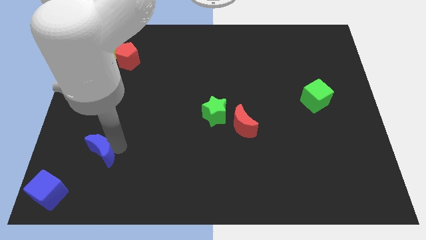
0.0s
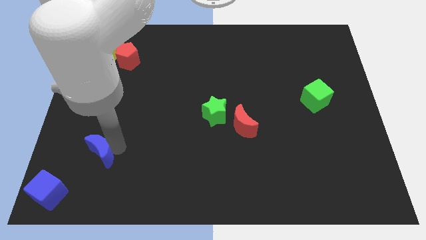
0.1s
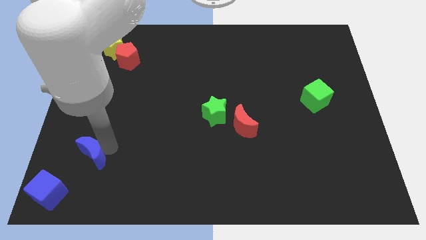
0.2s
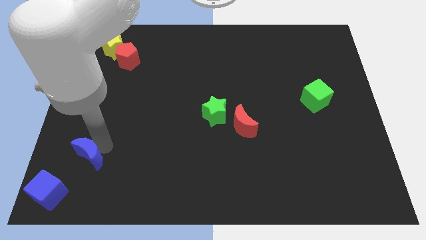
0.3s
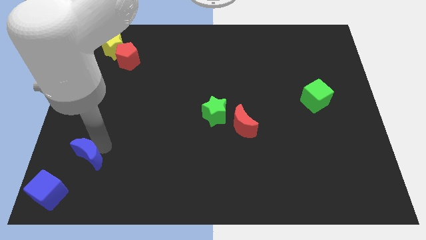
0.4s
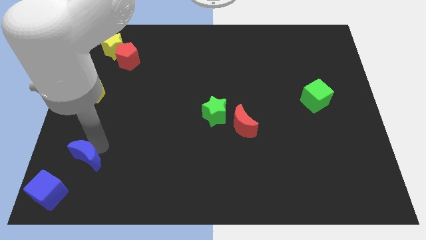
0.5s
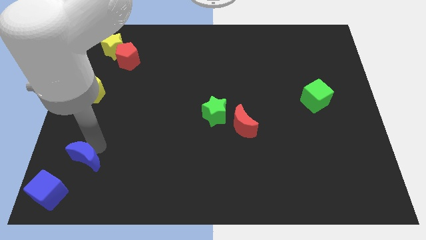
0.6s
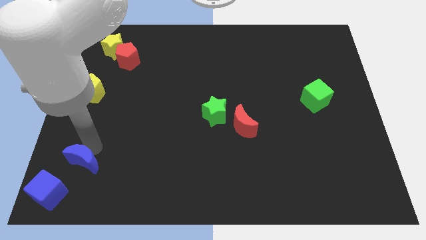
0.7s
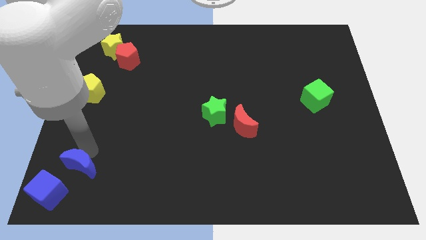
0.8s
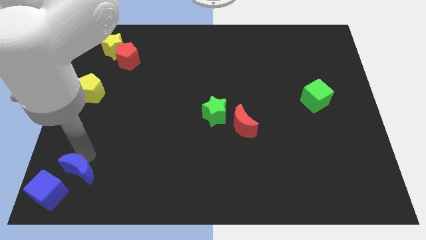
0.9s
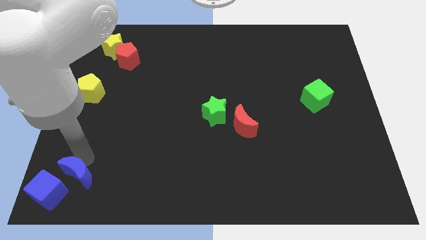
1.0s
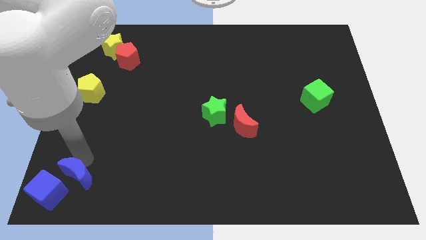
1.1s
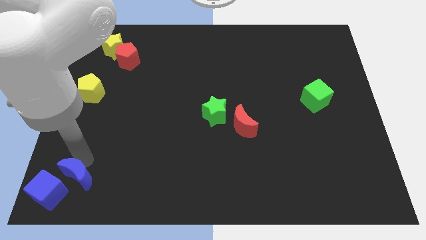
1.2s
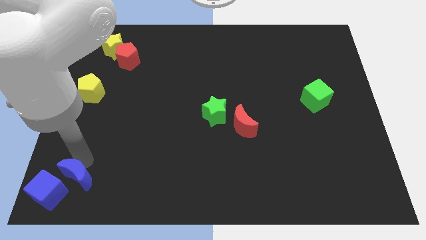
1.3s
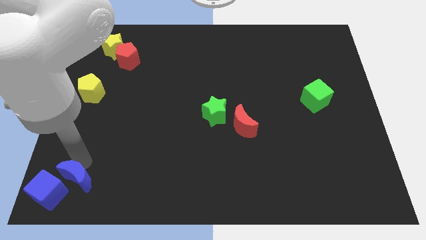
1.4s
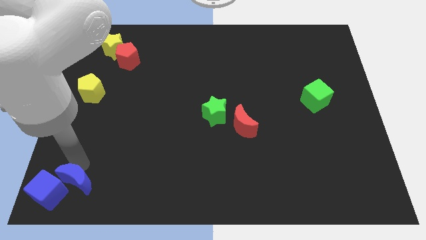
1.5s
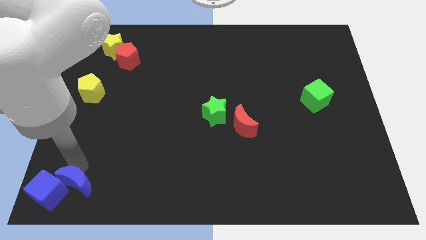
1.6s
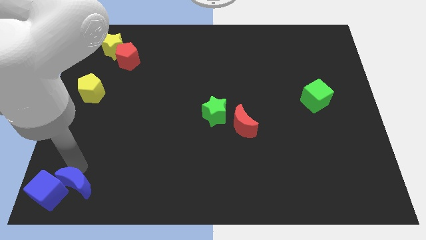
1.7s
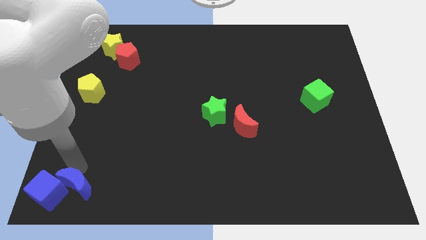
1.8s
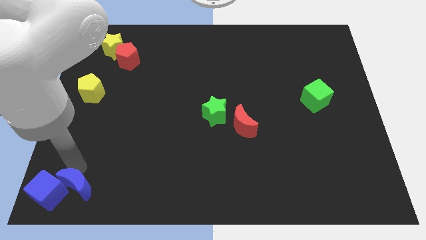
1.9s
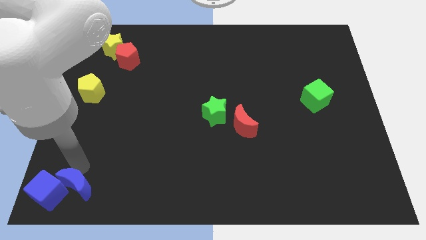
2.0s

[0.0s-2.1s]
move the blue crescent into the blue cube

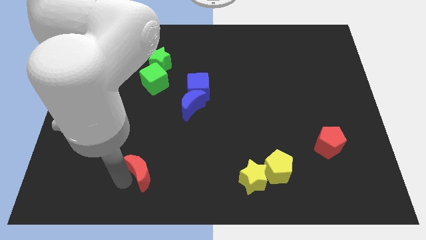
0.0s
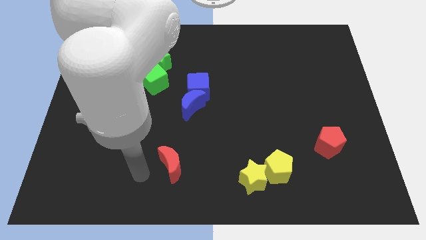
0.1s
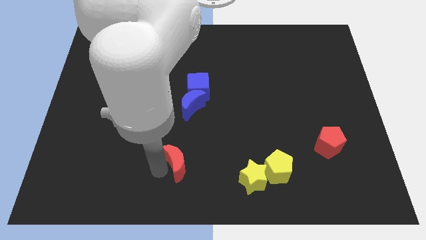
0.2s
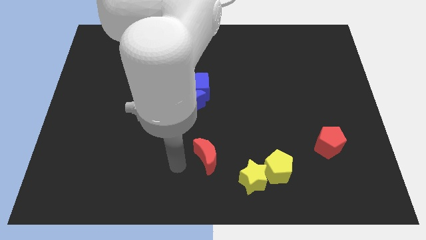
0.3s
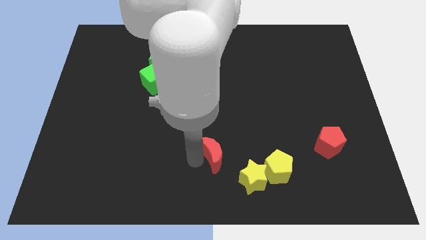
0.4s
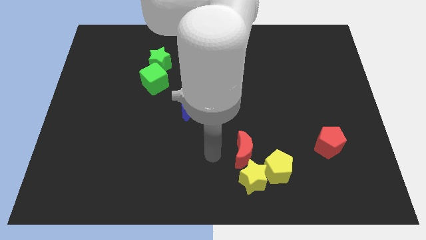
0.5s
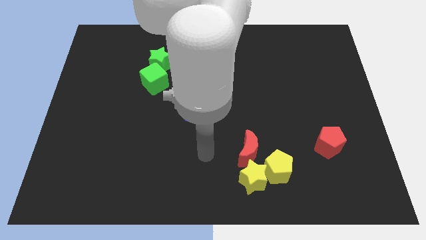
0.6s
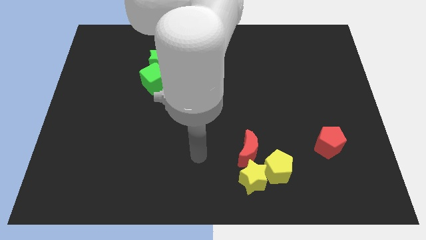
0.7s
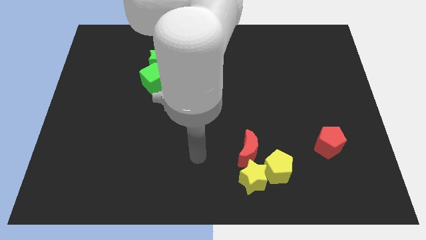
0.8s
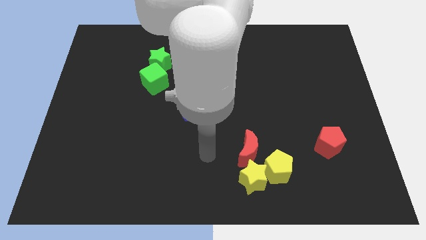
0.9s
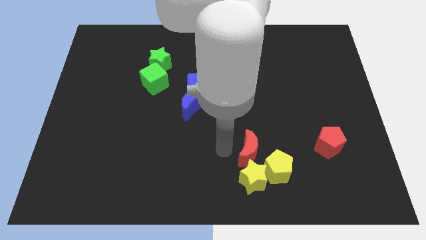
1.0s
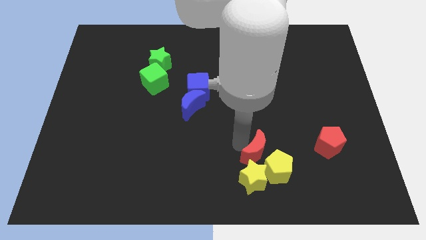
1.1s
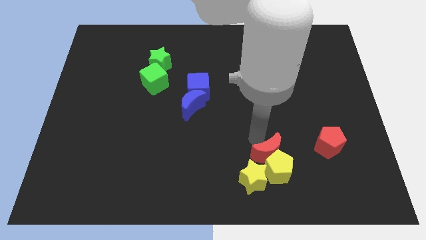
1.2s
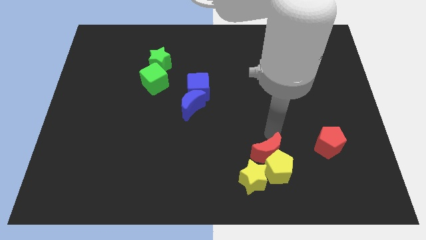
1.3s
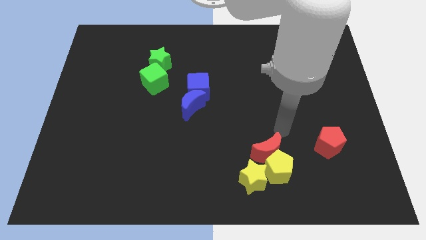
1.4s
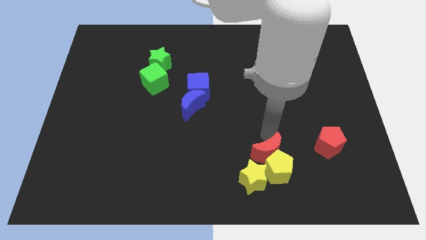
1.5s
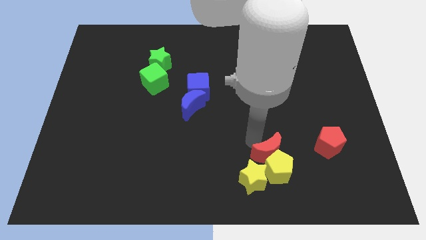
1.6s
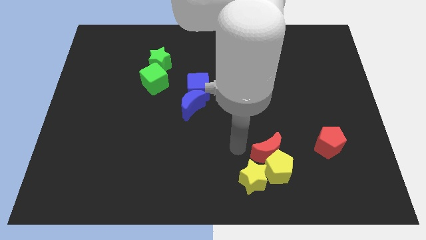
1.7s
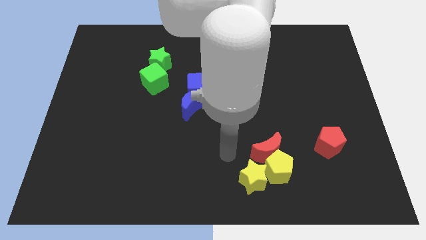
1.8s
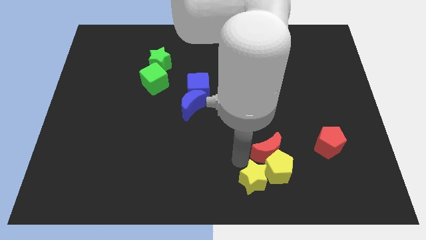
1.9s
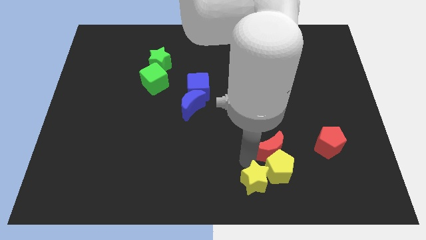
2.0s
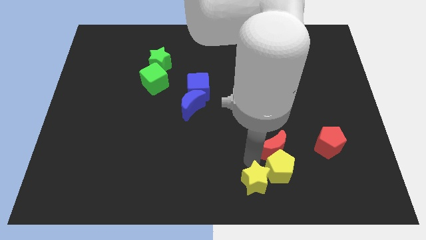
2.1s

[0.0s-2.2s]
push red crescent above yellow pentagon

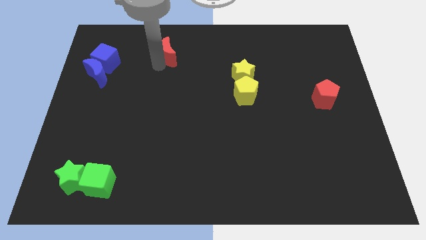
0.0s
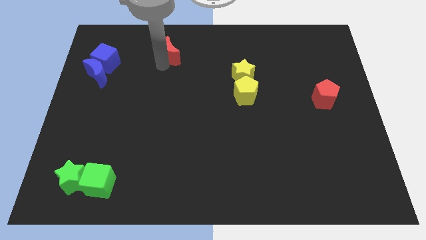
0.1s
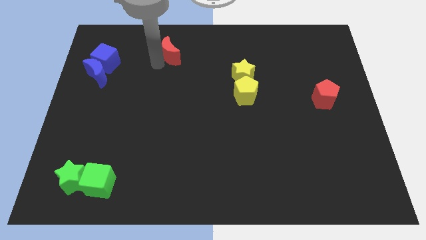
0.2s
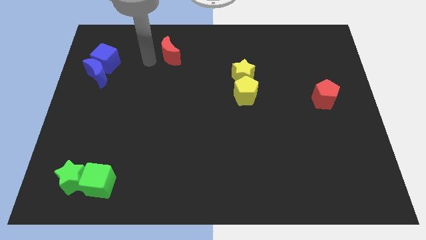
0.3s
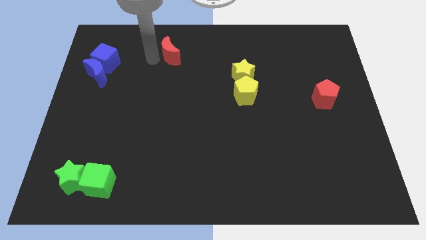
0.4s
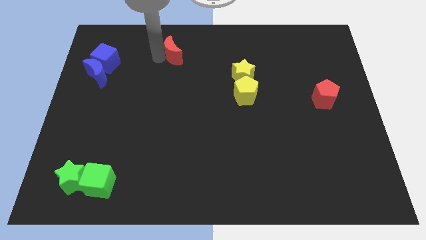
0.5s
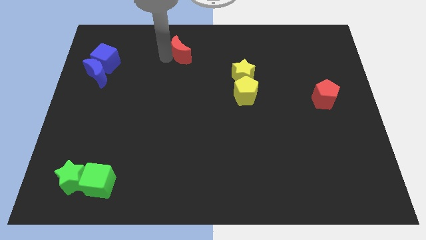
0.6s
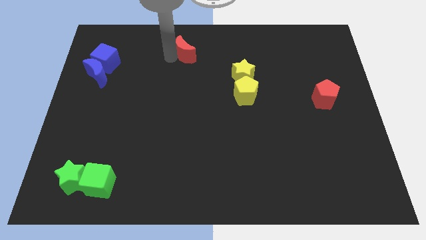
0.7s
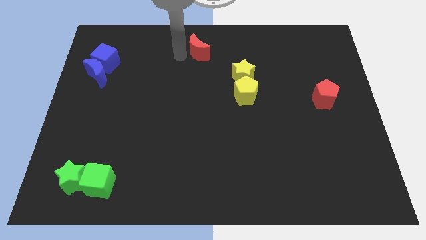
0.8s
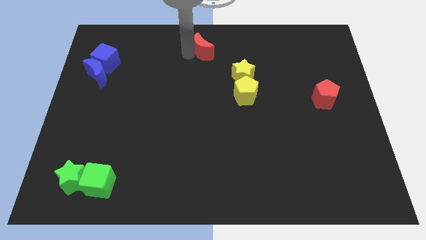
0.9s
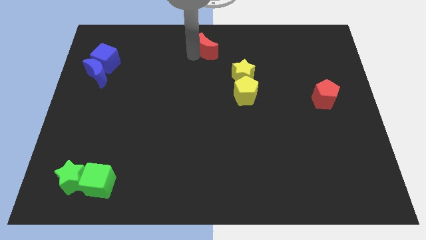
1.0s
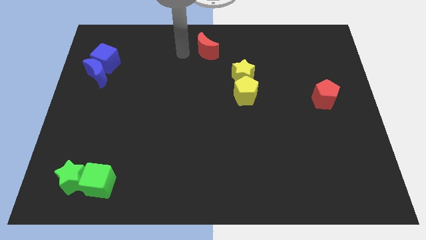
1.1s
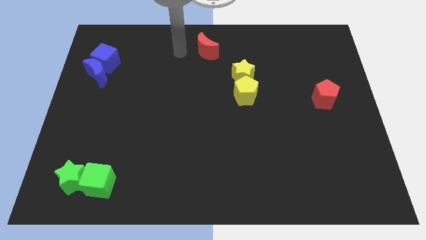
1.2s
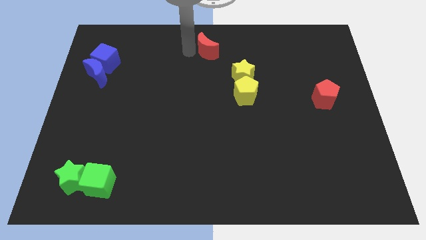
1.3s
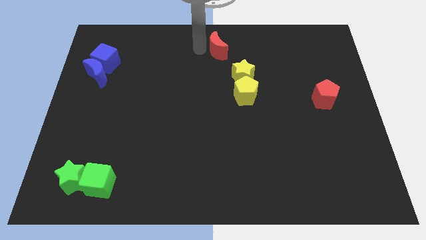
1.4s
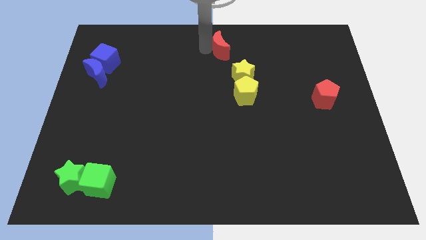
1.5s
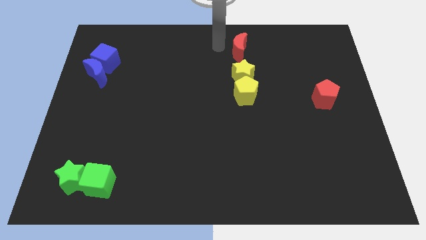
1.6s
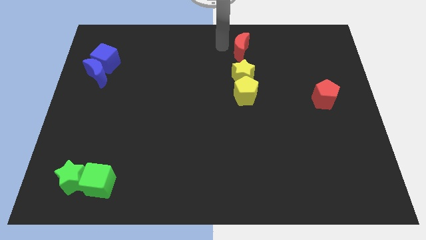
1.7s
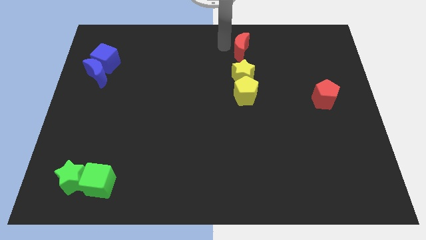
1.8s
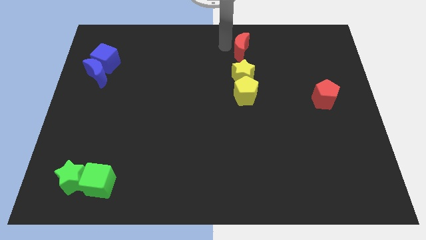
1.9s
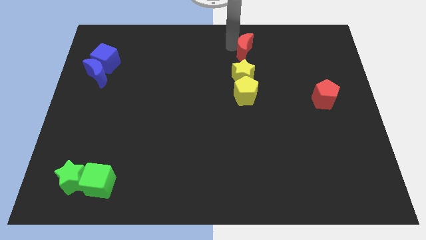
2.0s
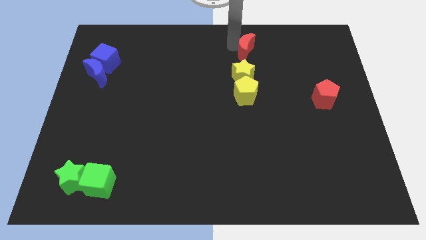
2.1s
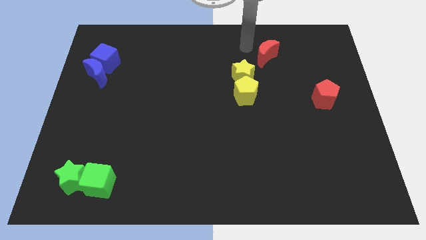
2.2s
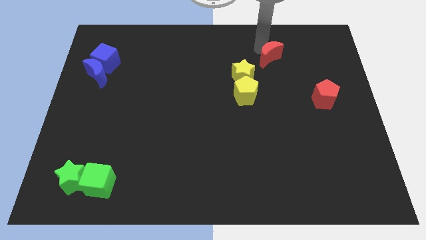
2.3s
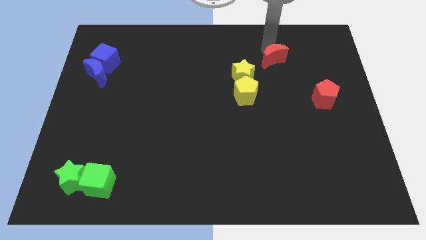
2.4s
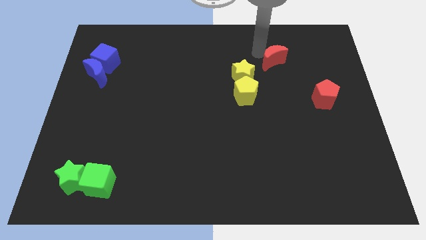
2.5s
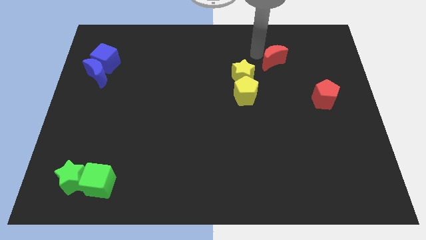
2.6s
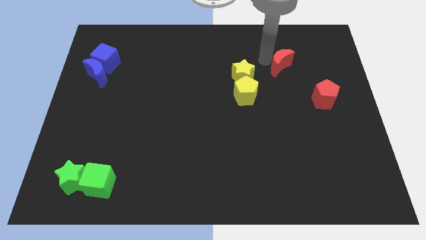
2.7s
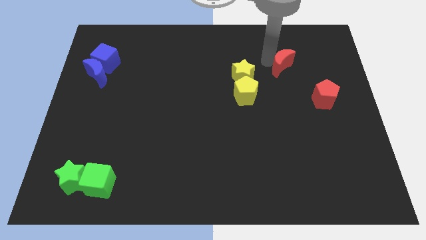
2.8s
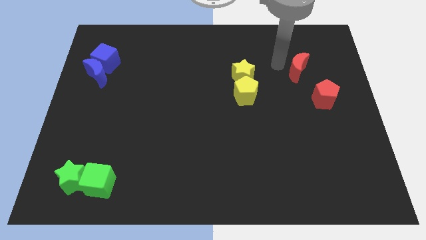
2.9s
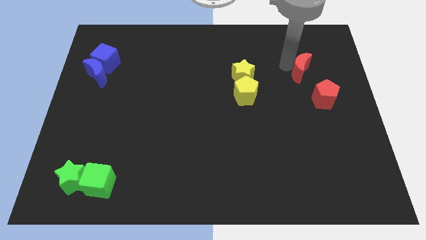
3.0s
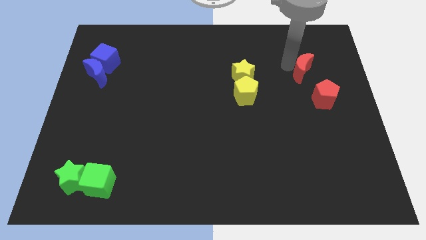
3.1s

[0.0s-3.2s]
place the red moon right to the yellow star

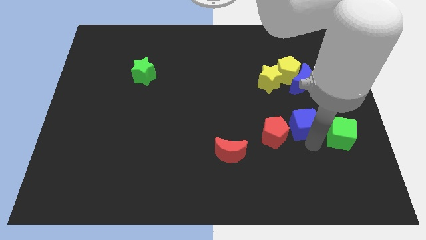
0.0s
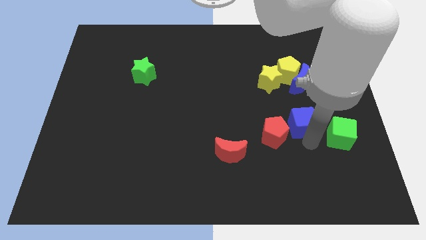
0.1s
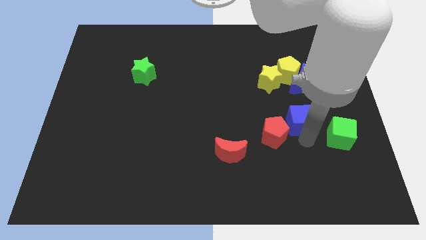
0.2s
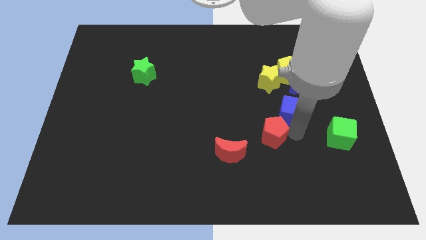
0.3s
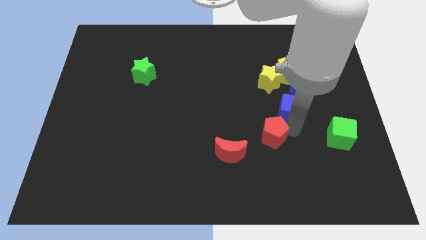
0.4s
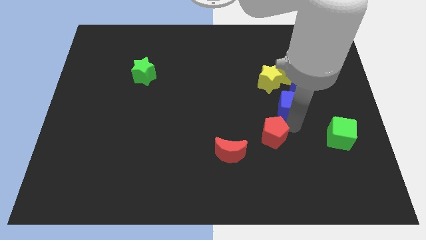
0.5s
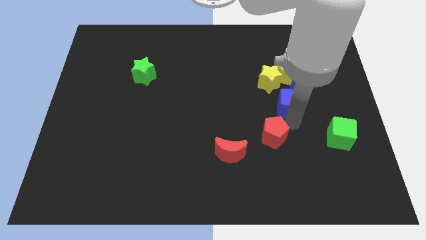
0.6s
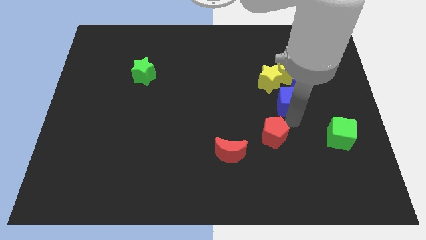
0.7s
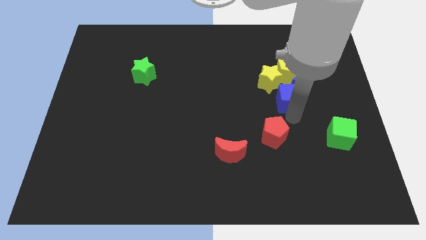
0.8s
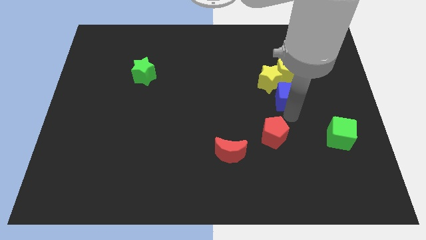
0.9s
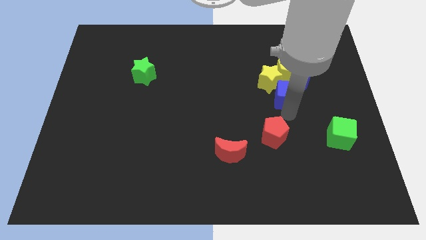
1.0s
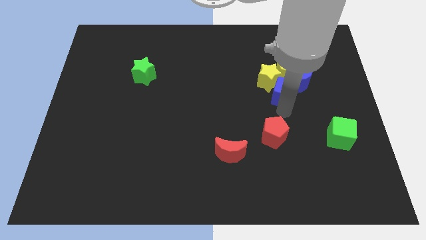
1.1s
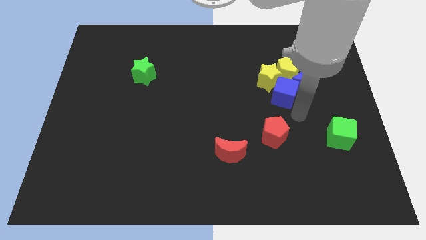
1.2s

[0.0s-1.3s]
push the blue cube towards the yellow star
